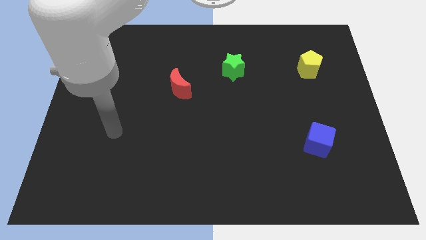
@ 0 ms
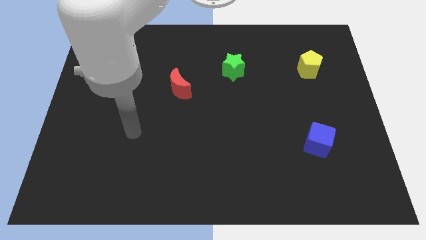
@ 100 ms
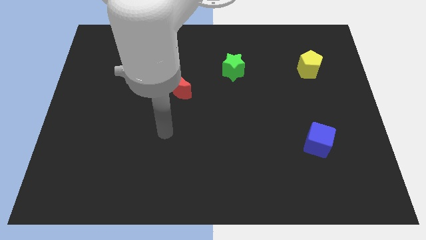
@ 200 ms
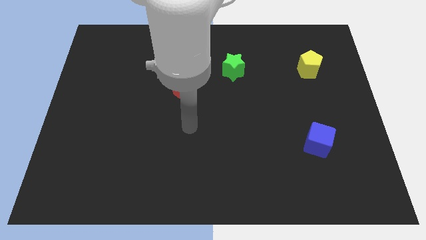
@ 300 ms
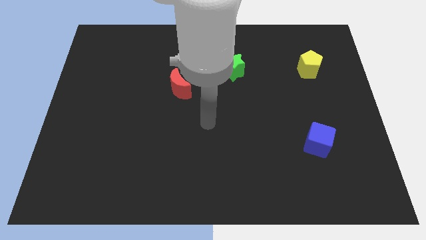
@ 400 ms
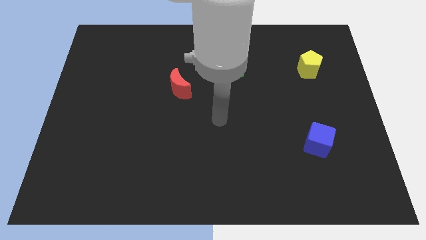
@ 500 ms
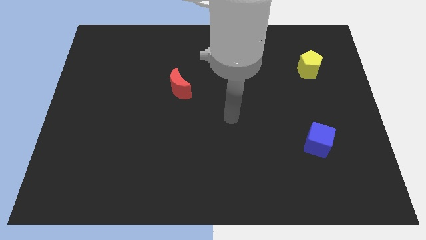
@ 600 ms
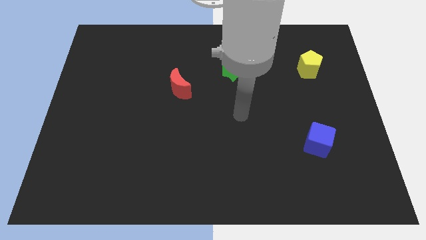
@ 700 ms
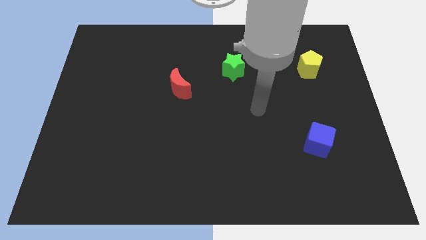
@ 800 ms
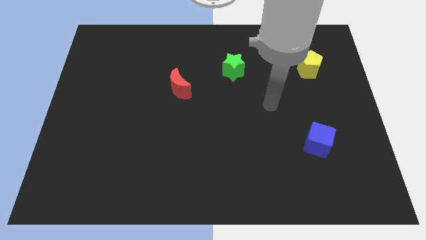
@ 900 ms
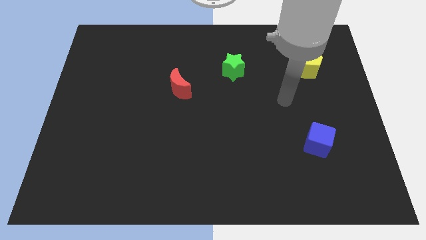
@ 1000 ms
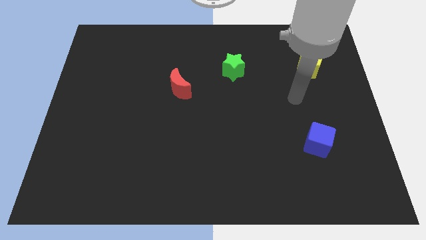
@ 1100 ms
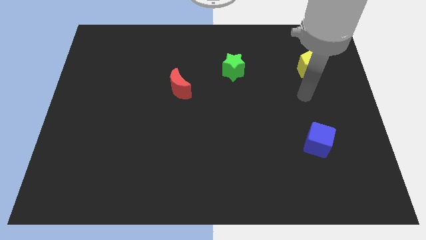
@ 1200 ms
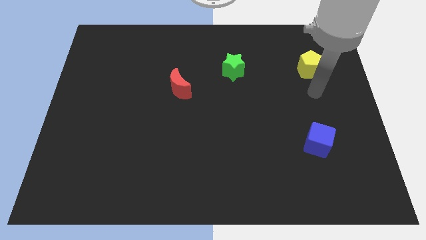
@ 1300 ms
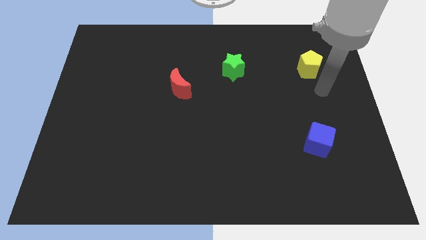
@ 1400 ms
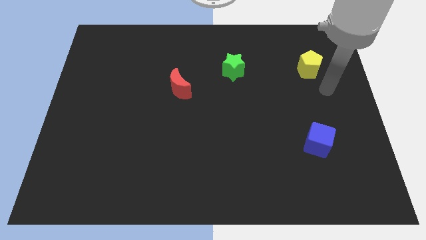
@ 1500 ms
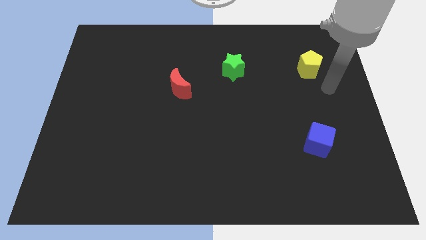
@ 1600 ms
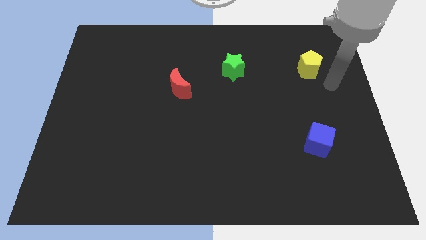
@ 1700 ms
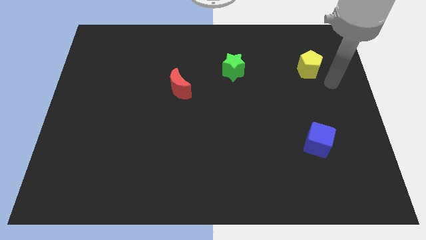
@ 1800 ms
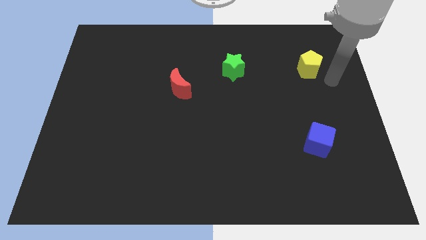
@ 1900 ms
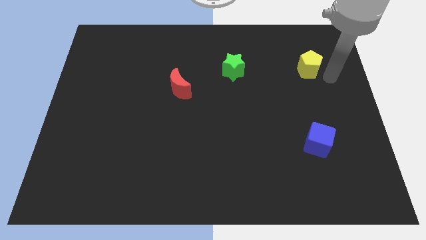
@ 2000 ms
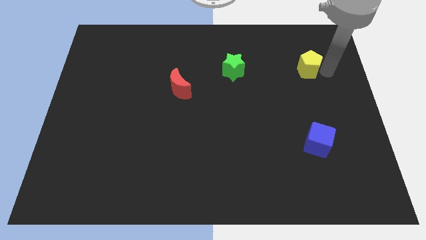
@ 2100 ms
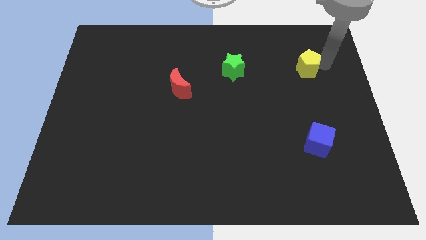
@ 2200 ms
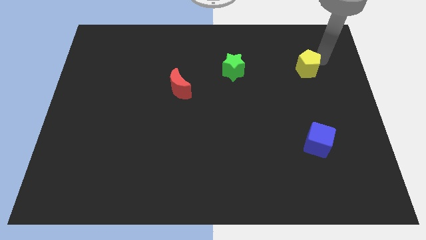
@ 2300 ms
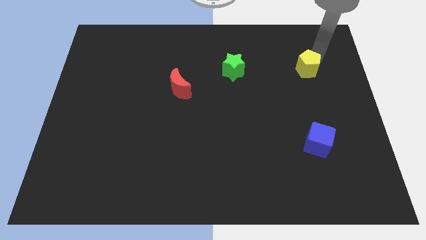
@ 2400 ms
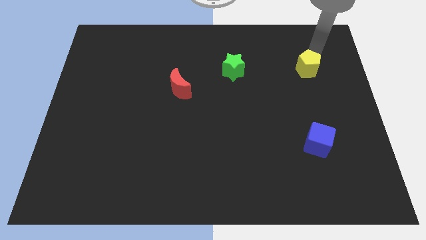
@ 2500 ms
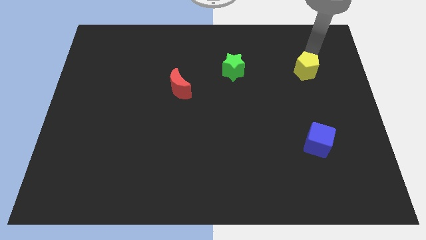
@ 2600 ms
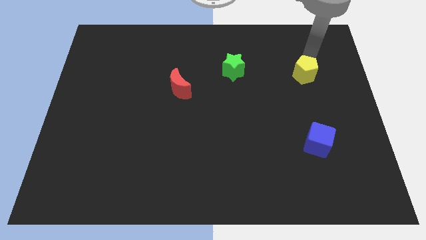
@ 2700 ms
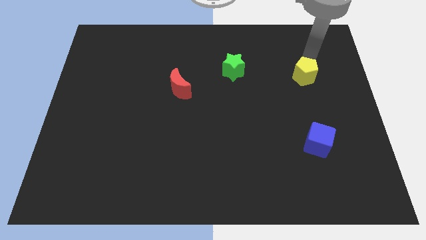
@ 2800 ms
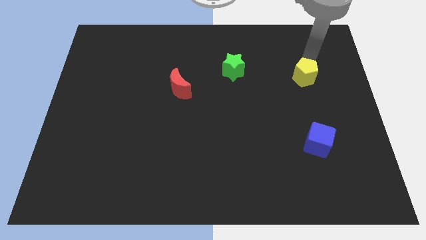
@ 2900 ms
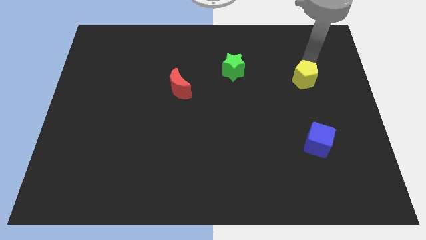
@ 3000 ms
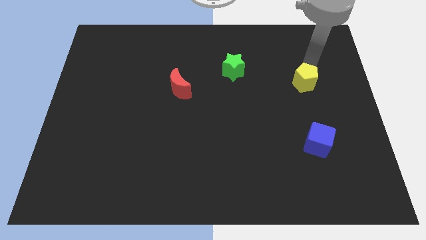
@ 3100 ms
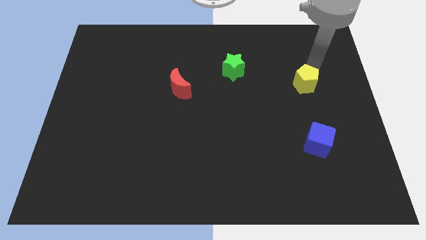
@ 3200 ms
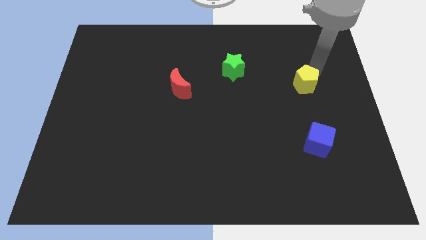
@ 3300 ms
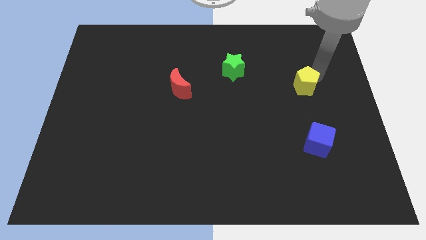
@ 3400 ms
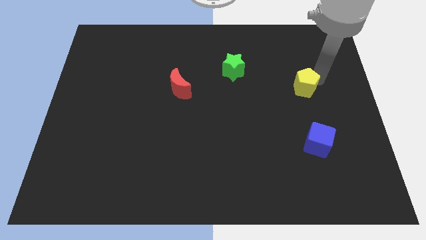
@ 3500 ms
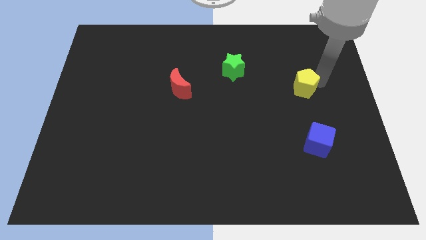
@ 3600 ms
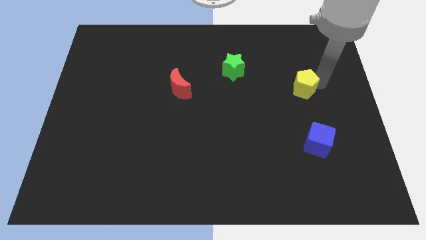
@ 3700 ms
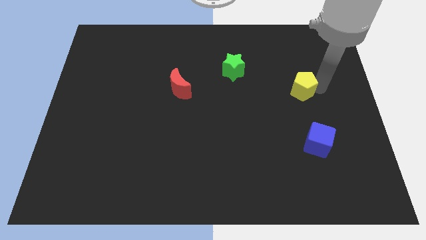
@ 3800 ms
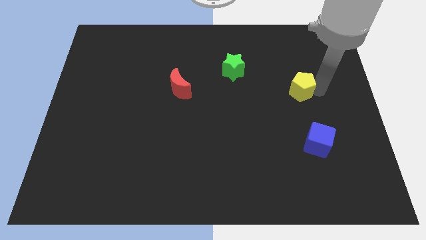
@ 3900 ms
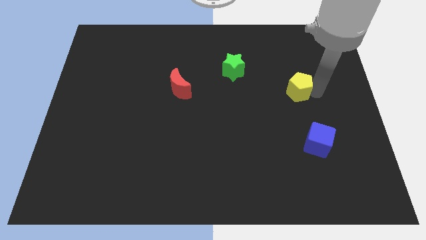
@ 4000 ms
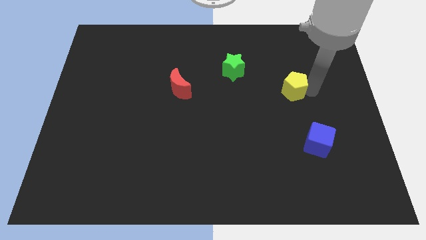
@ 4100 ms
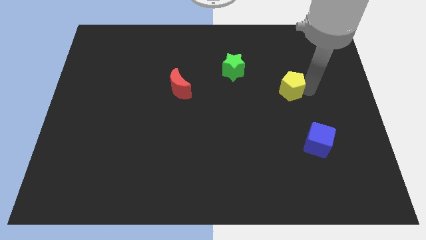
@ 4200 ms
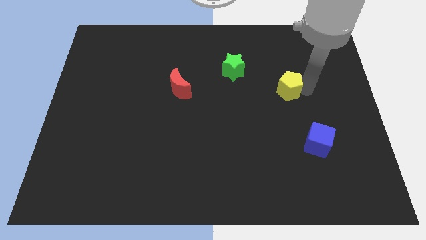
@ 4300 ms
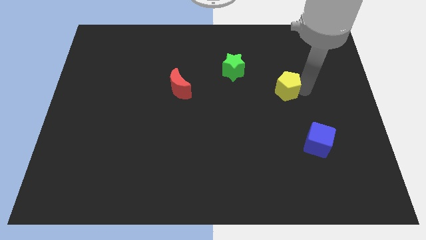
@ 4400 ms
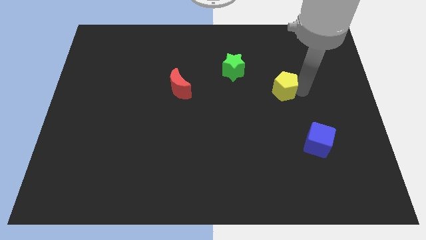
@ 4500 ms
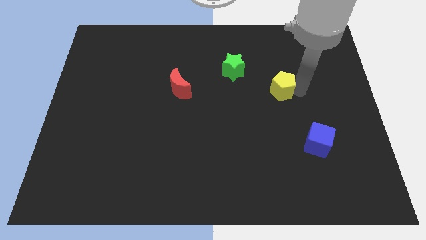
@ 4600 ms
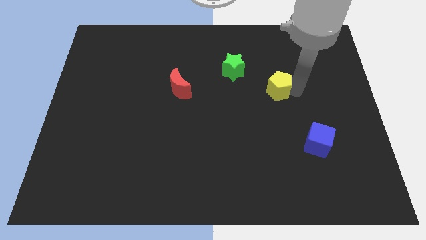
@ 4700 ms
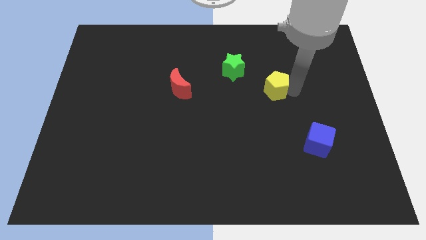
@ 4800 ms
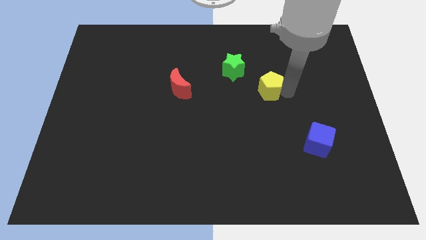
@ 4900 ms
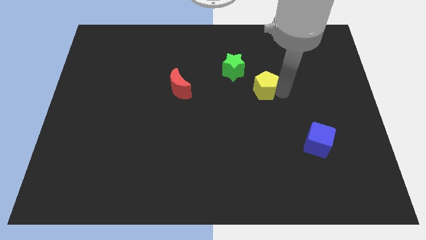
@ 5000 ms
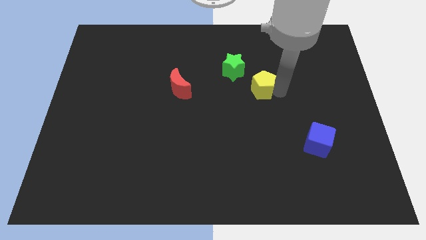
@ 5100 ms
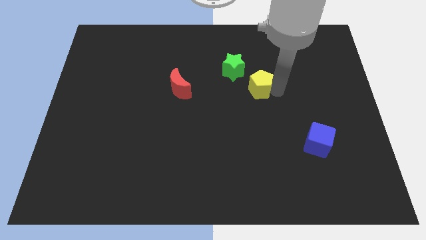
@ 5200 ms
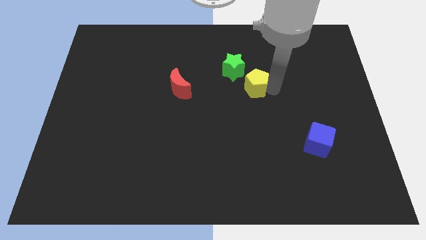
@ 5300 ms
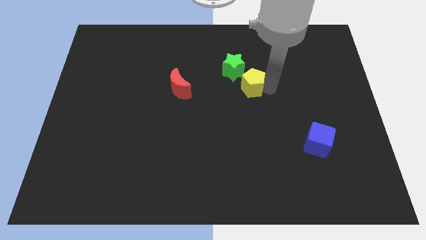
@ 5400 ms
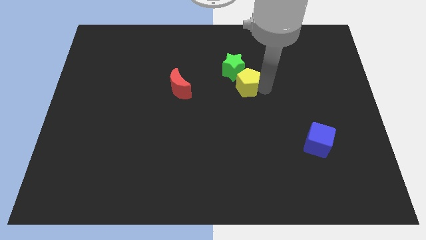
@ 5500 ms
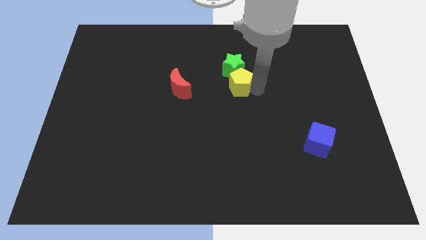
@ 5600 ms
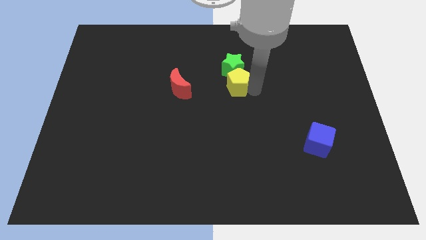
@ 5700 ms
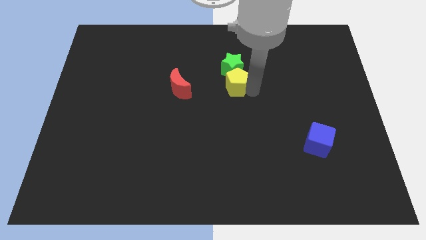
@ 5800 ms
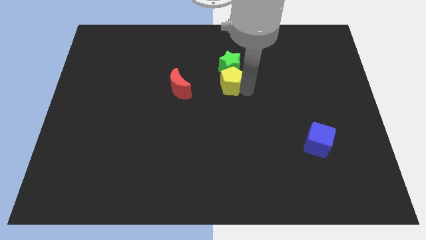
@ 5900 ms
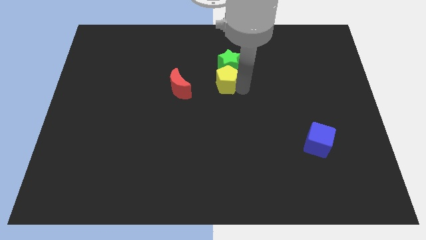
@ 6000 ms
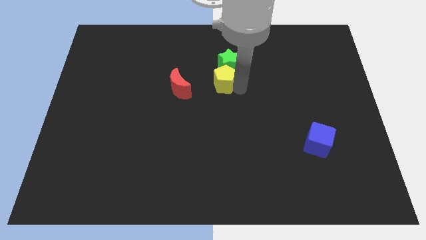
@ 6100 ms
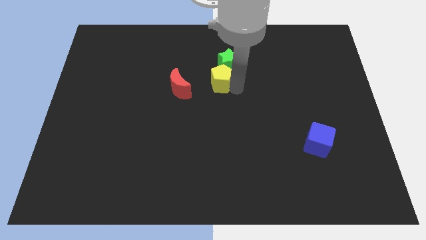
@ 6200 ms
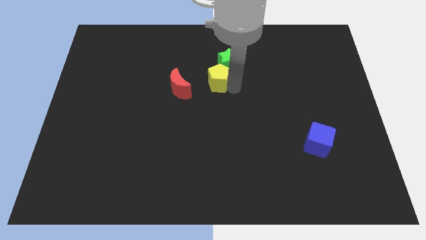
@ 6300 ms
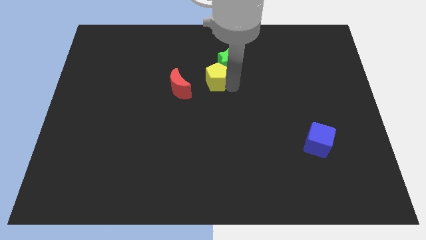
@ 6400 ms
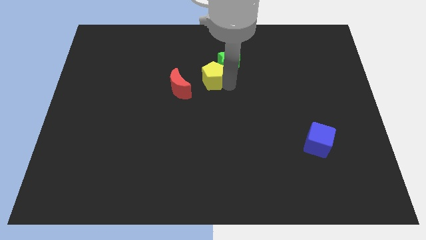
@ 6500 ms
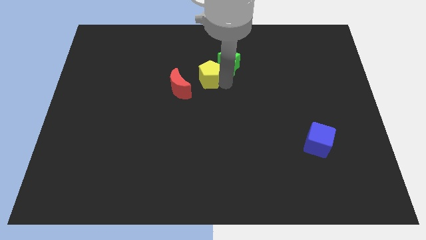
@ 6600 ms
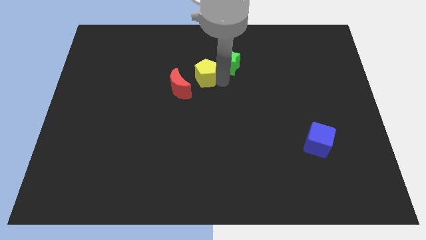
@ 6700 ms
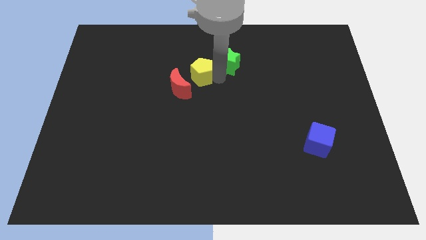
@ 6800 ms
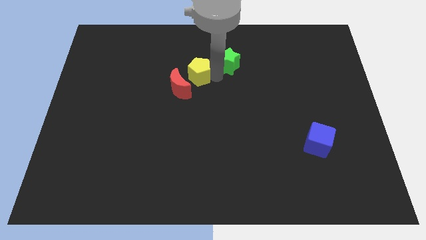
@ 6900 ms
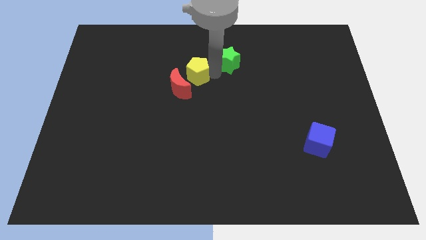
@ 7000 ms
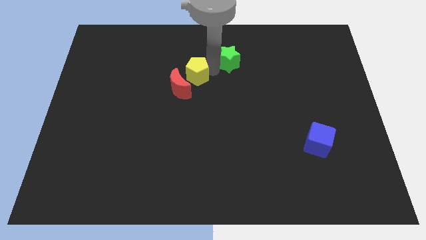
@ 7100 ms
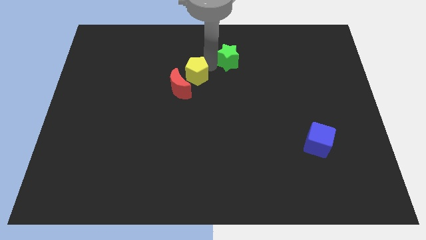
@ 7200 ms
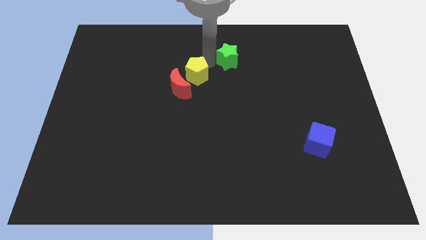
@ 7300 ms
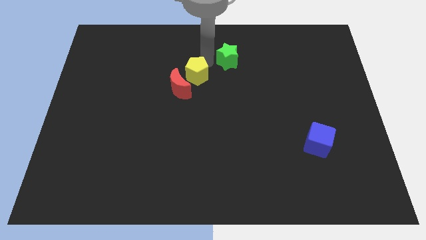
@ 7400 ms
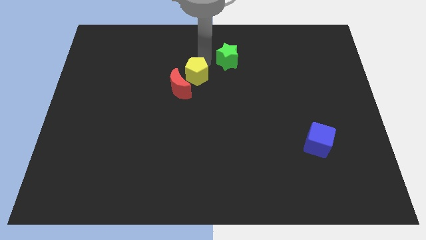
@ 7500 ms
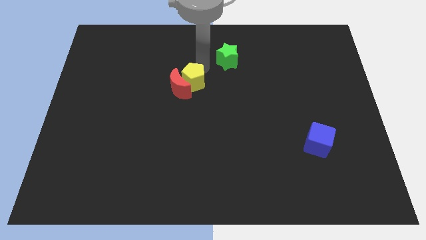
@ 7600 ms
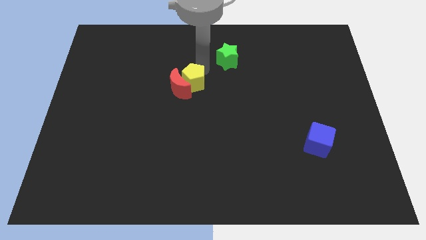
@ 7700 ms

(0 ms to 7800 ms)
put the yellow block to the red moon

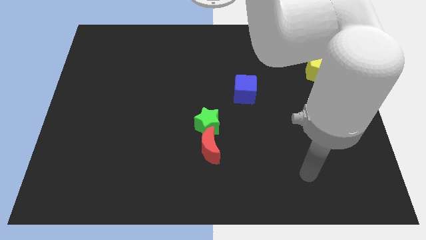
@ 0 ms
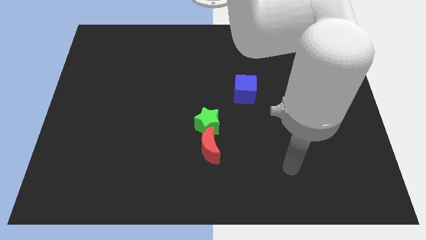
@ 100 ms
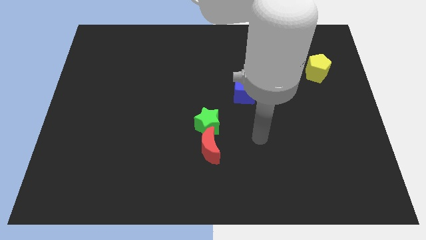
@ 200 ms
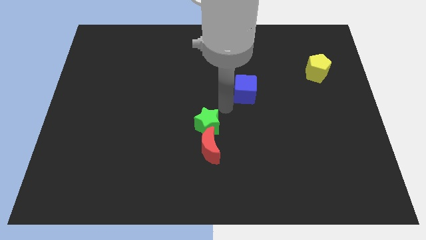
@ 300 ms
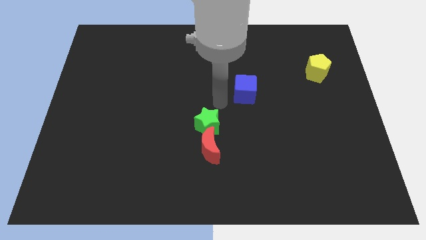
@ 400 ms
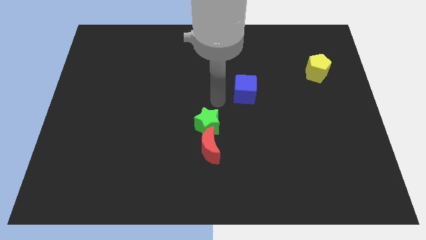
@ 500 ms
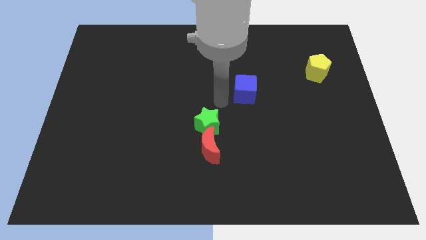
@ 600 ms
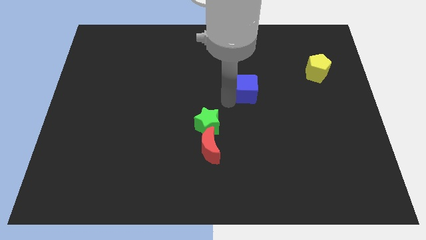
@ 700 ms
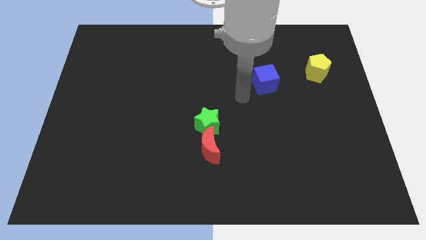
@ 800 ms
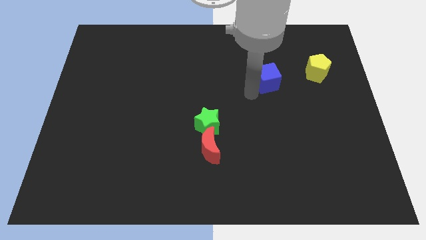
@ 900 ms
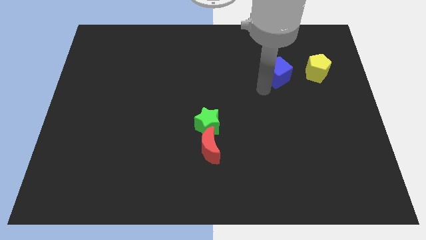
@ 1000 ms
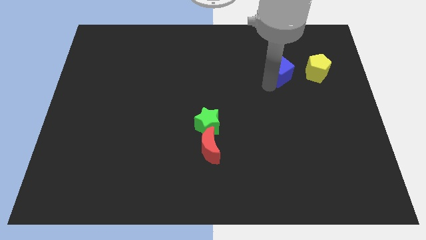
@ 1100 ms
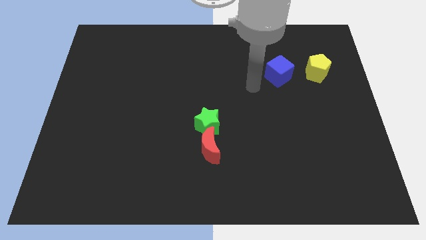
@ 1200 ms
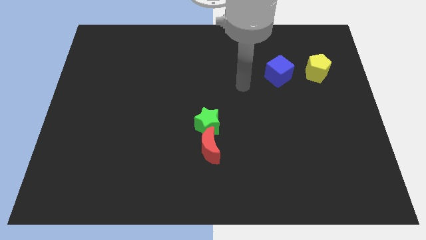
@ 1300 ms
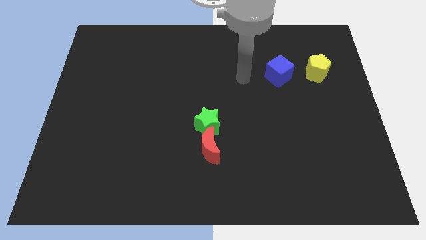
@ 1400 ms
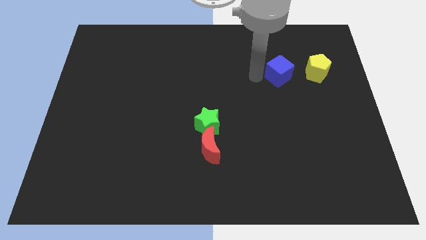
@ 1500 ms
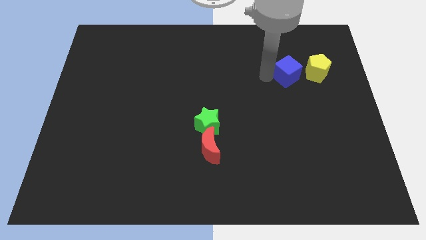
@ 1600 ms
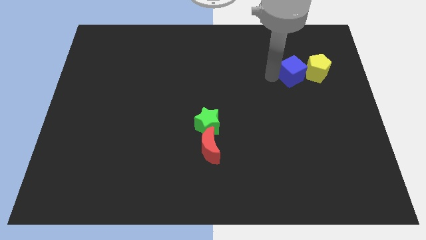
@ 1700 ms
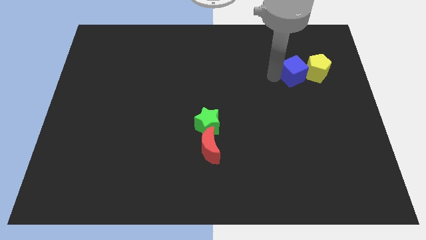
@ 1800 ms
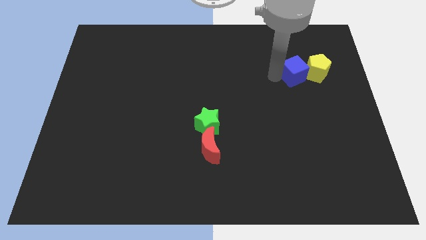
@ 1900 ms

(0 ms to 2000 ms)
move the blue block towards the yellow pentagon
